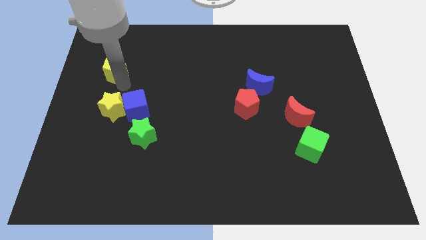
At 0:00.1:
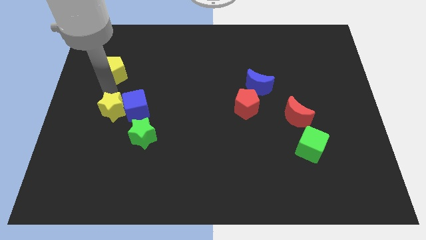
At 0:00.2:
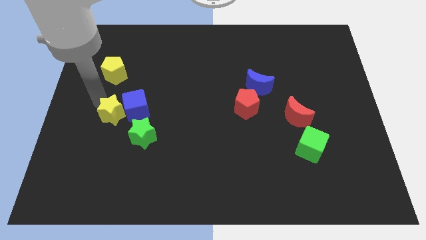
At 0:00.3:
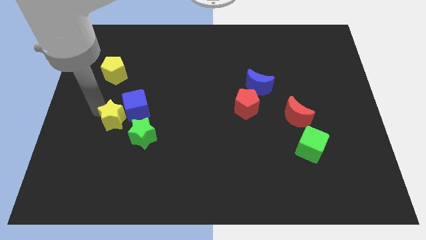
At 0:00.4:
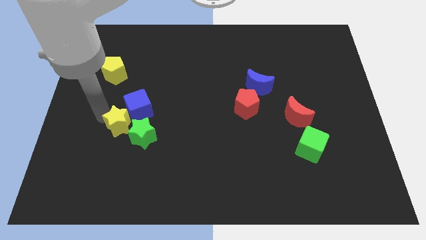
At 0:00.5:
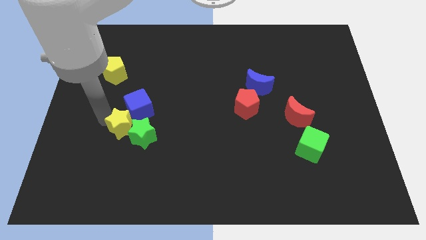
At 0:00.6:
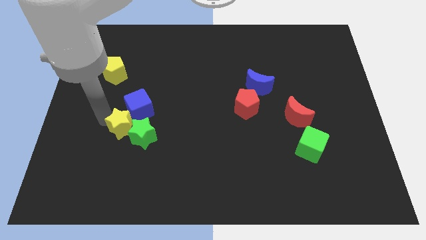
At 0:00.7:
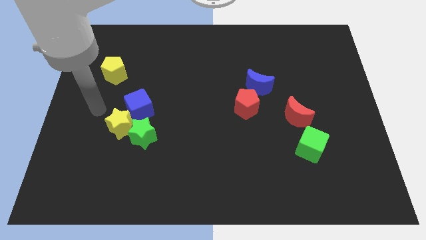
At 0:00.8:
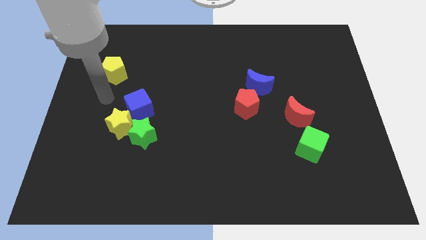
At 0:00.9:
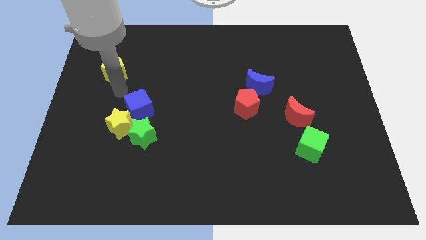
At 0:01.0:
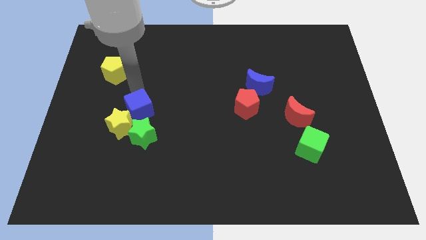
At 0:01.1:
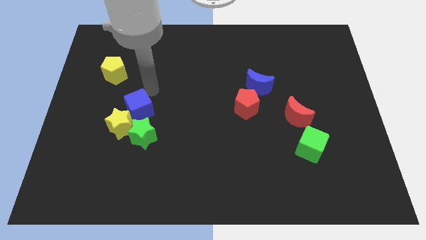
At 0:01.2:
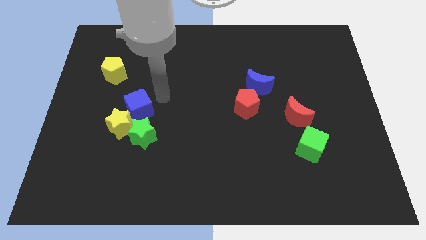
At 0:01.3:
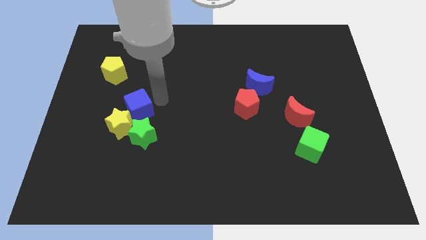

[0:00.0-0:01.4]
move the yellow star into the green star

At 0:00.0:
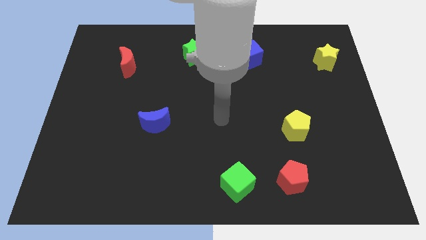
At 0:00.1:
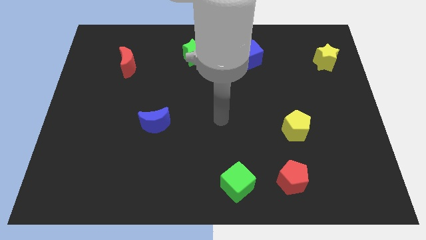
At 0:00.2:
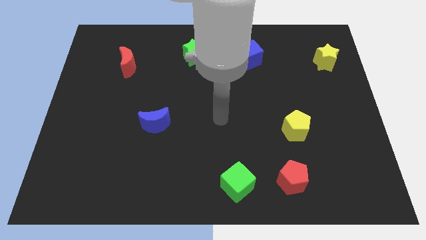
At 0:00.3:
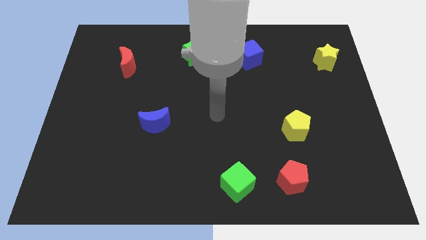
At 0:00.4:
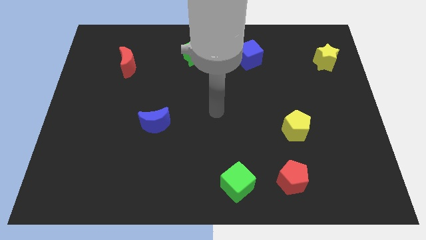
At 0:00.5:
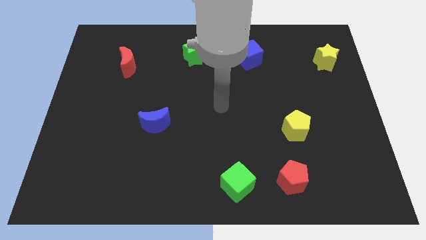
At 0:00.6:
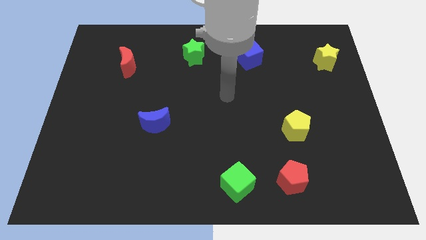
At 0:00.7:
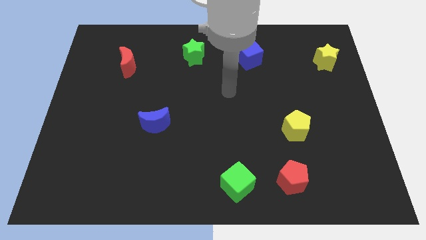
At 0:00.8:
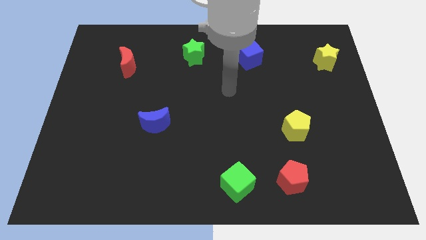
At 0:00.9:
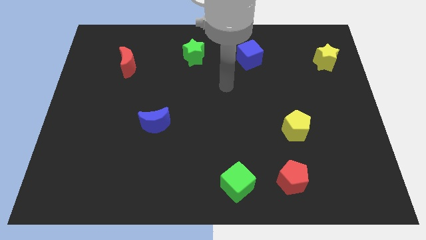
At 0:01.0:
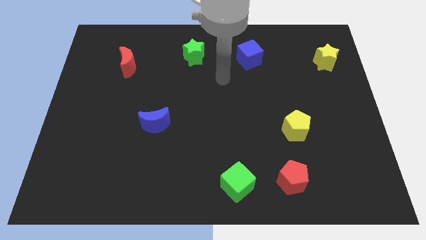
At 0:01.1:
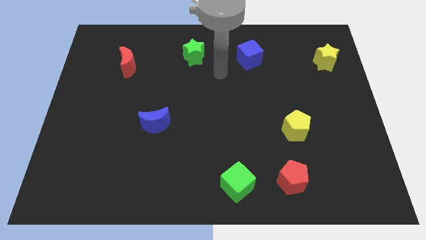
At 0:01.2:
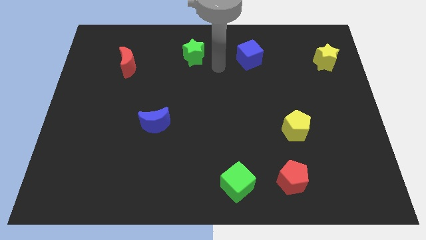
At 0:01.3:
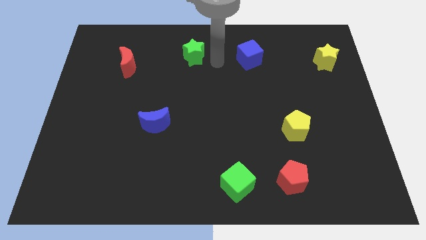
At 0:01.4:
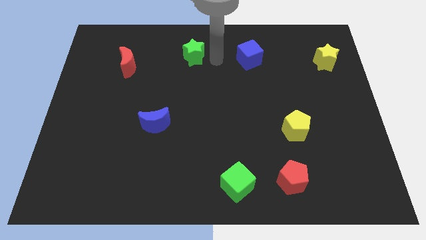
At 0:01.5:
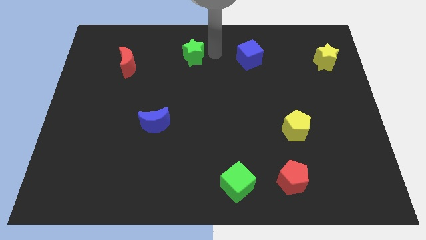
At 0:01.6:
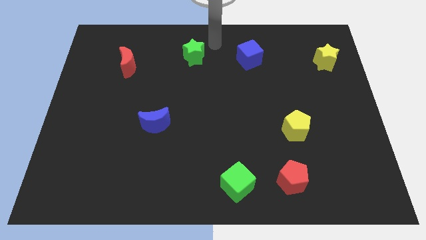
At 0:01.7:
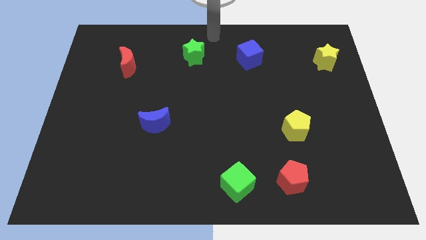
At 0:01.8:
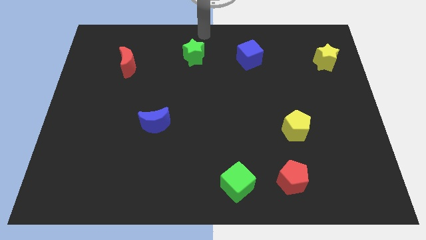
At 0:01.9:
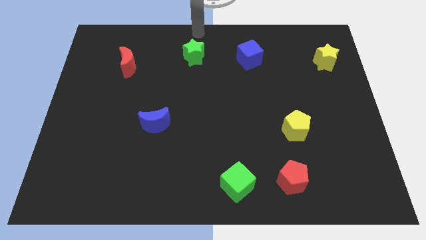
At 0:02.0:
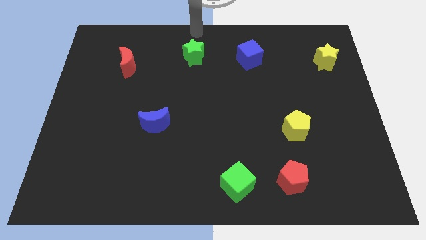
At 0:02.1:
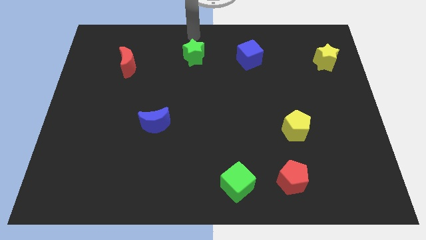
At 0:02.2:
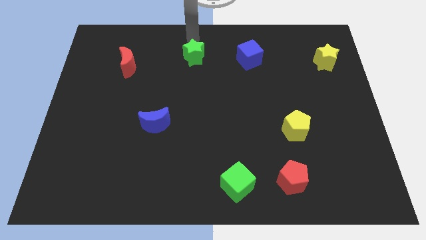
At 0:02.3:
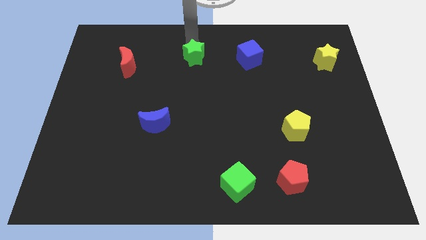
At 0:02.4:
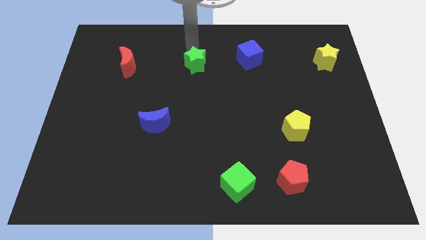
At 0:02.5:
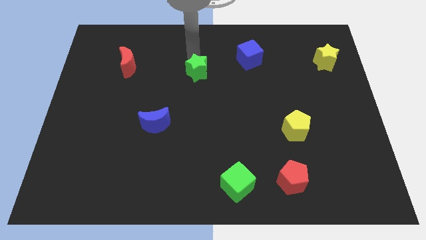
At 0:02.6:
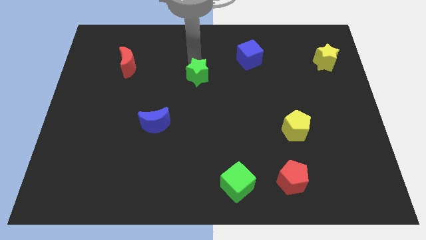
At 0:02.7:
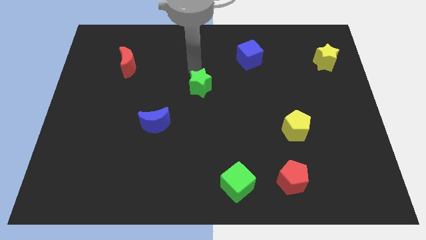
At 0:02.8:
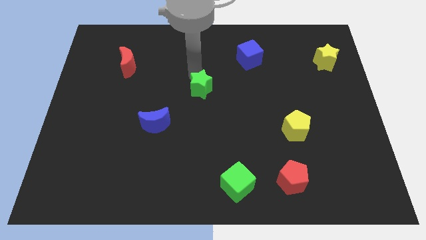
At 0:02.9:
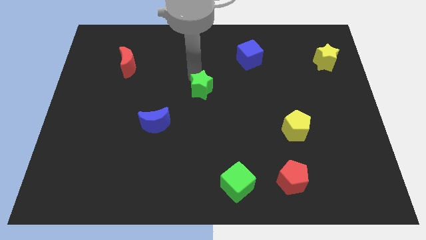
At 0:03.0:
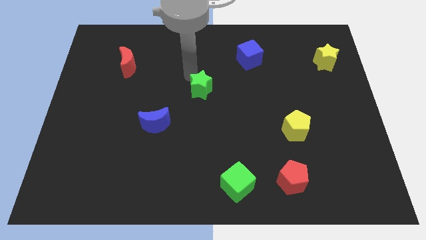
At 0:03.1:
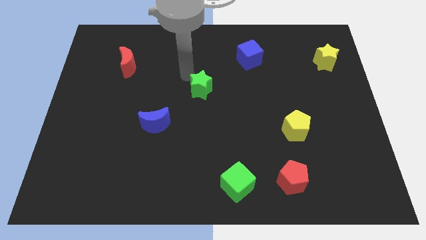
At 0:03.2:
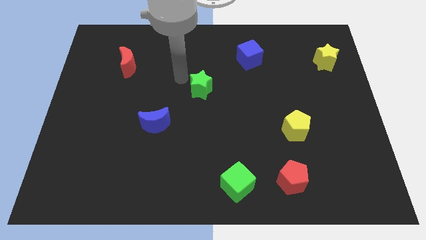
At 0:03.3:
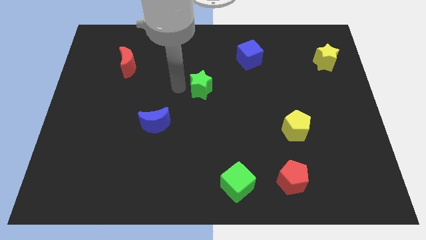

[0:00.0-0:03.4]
place the green star at the center of the board

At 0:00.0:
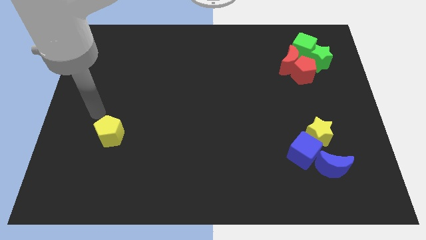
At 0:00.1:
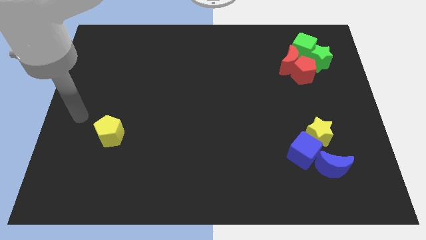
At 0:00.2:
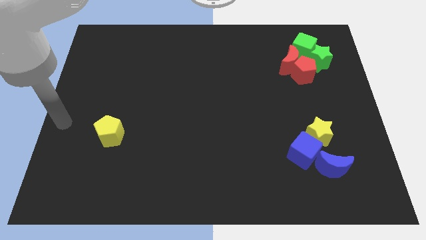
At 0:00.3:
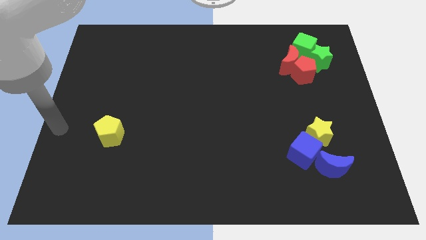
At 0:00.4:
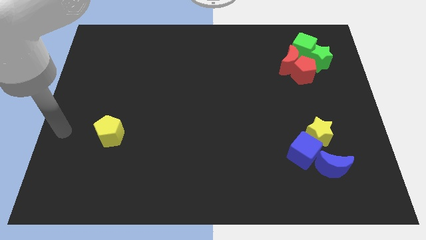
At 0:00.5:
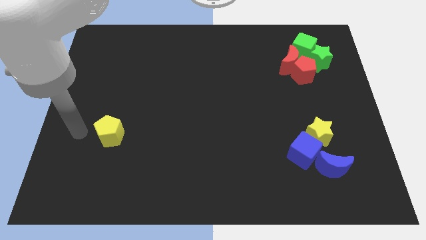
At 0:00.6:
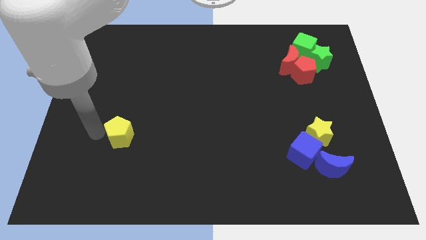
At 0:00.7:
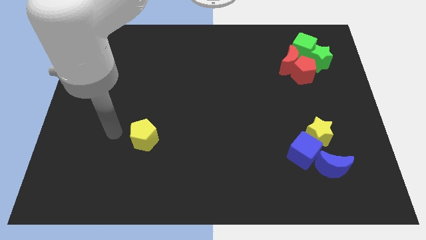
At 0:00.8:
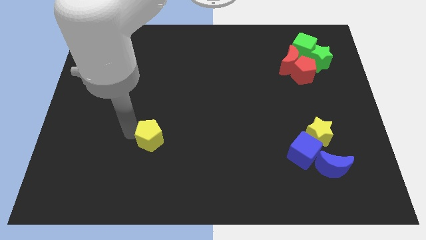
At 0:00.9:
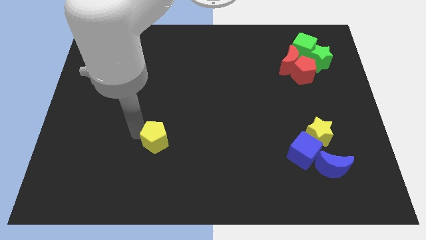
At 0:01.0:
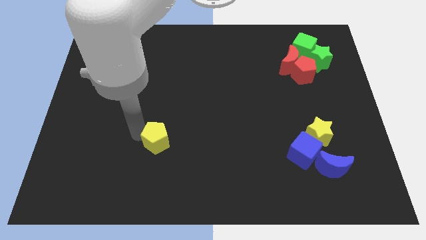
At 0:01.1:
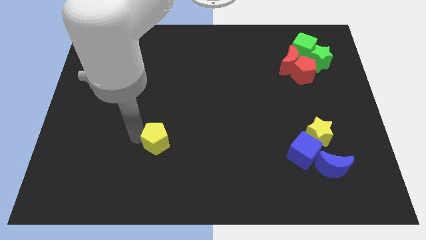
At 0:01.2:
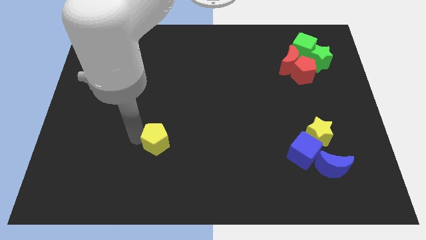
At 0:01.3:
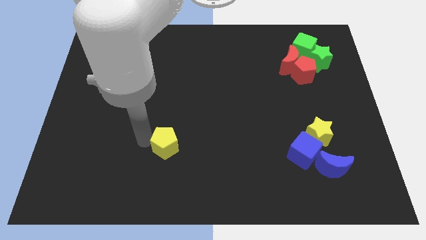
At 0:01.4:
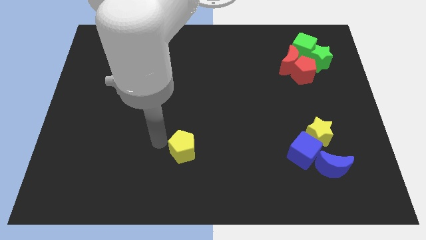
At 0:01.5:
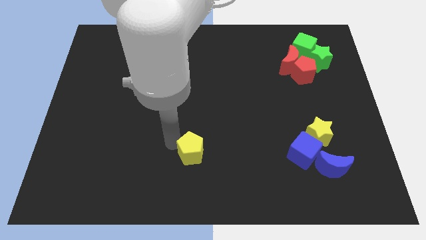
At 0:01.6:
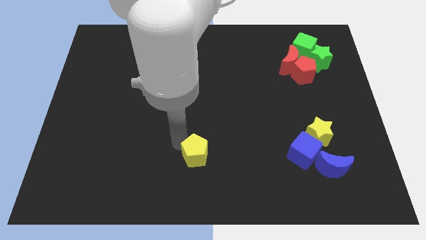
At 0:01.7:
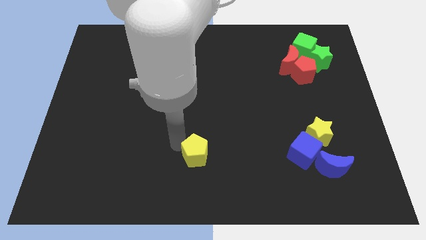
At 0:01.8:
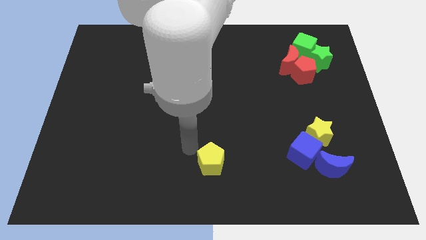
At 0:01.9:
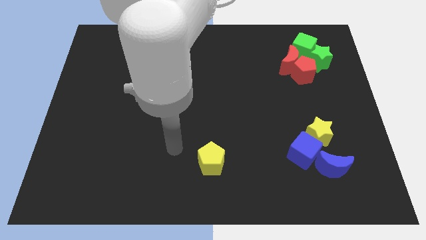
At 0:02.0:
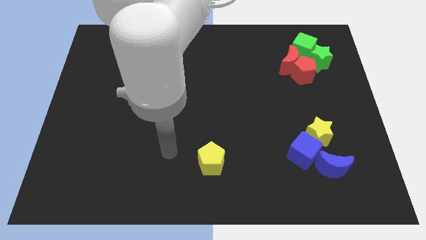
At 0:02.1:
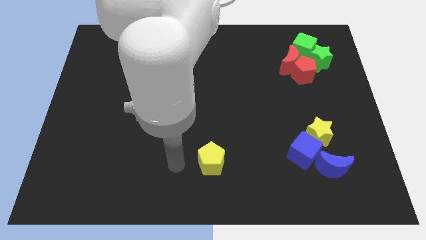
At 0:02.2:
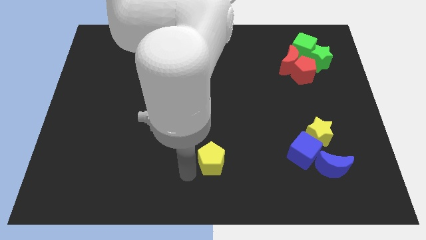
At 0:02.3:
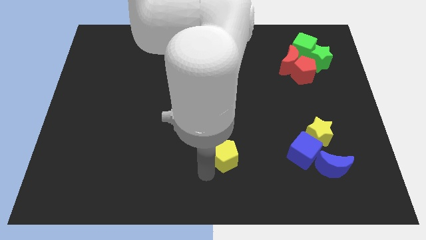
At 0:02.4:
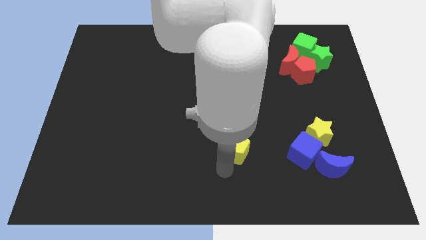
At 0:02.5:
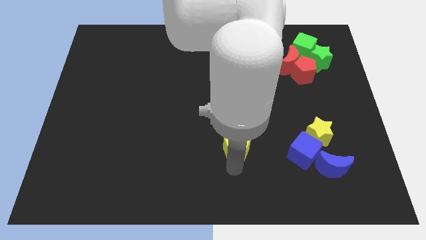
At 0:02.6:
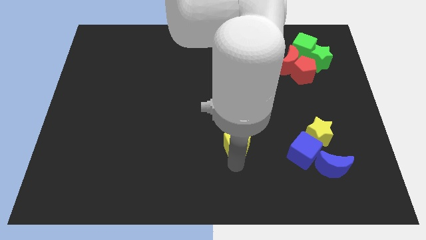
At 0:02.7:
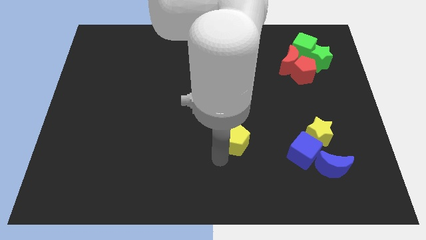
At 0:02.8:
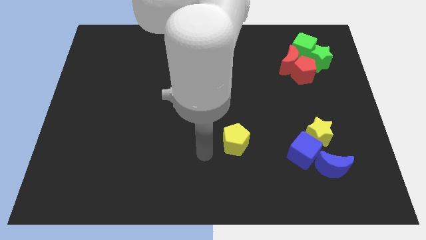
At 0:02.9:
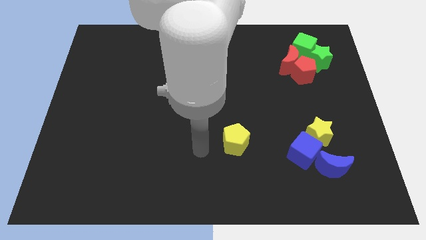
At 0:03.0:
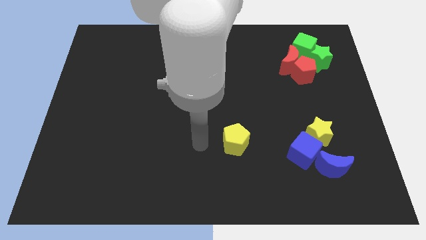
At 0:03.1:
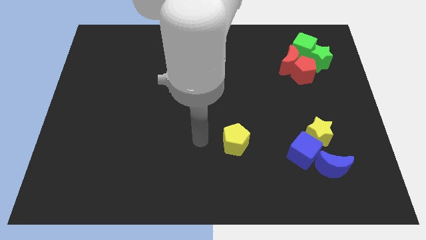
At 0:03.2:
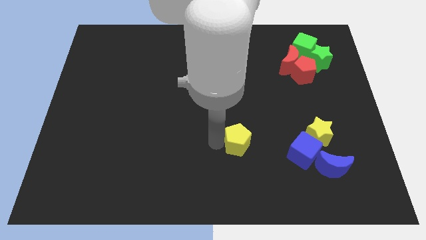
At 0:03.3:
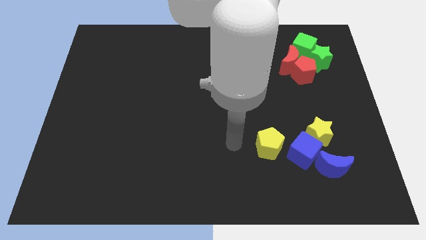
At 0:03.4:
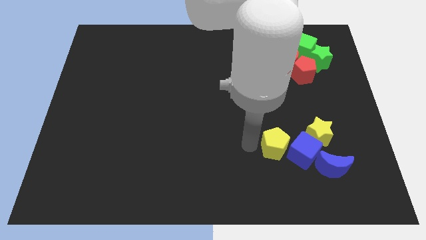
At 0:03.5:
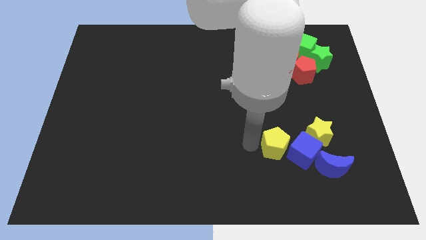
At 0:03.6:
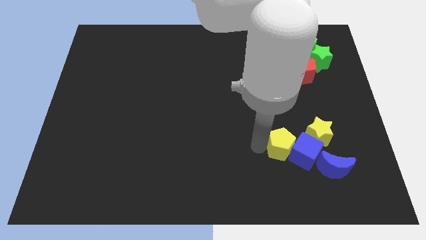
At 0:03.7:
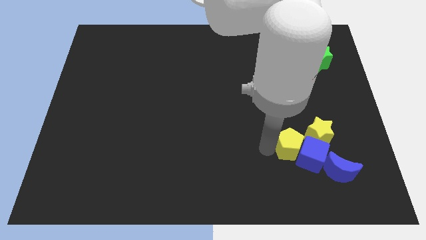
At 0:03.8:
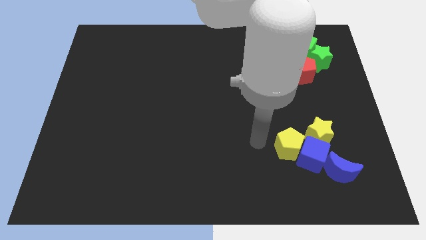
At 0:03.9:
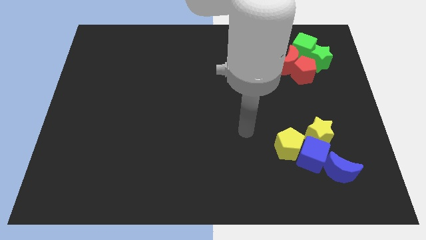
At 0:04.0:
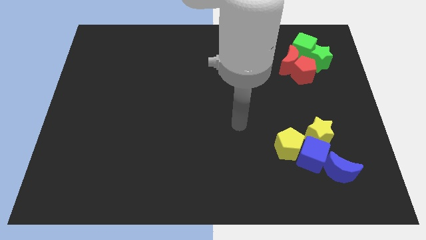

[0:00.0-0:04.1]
push the yellow pentagon into the blue cube from left side
